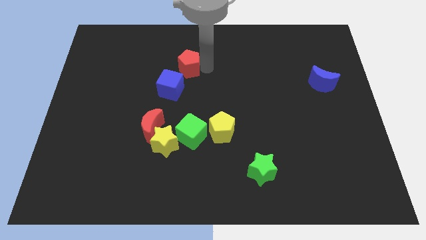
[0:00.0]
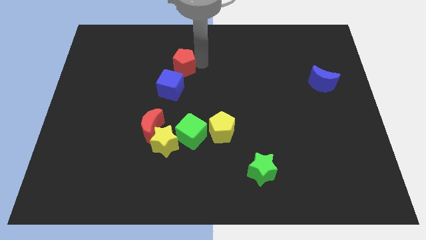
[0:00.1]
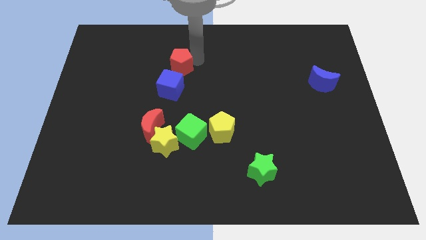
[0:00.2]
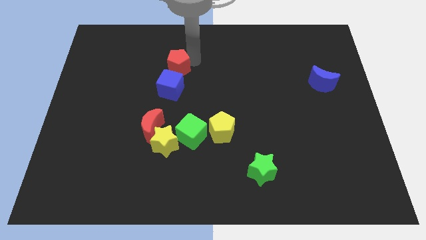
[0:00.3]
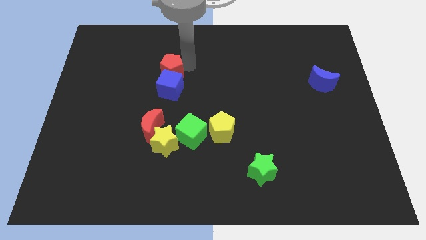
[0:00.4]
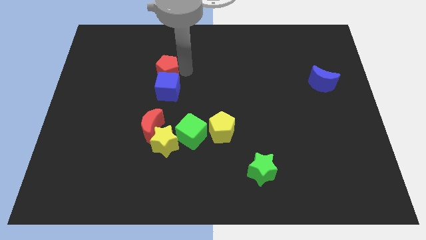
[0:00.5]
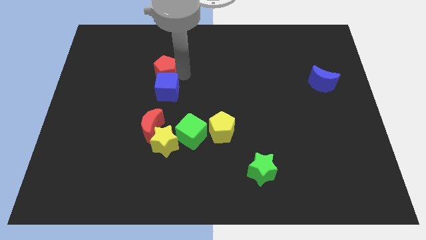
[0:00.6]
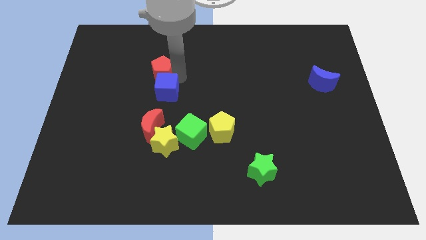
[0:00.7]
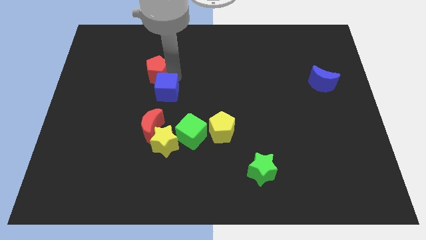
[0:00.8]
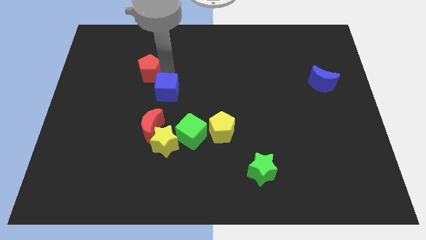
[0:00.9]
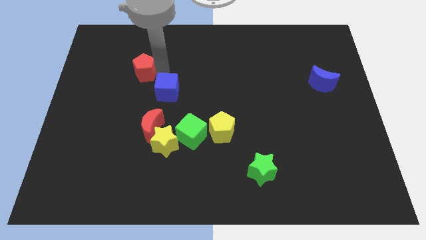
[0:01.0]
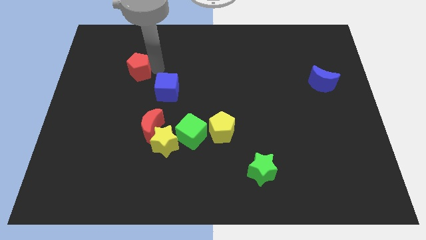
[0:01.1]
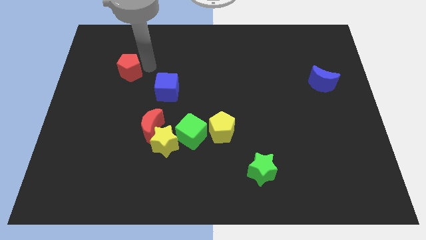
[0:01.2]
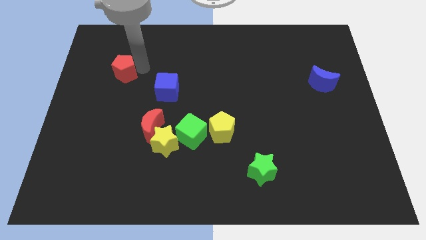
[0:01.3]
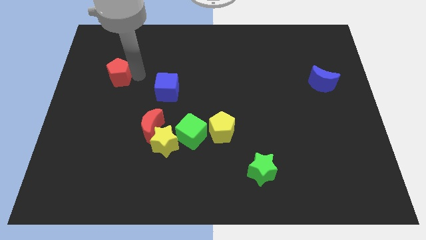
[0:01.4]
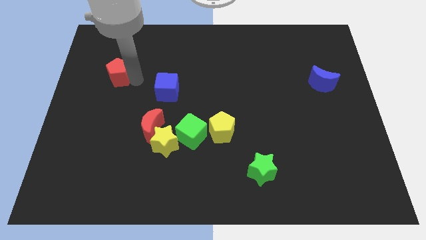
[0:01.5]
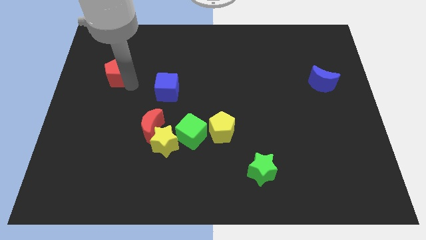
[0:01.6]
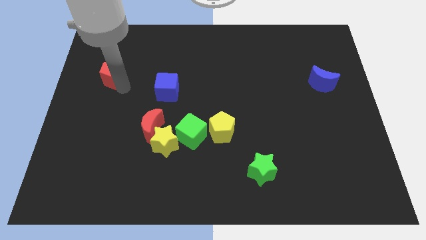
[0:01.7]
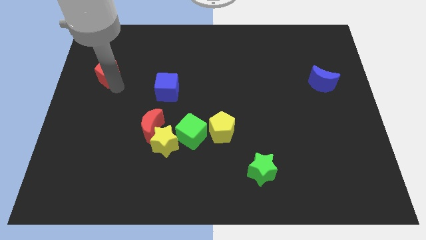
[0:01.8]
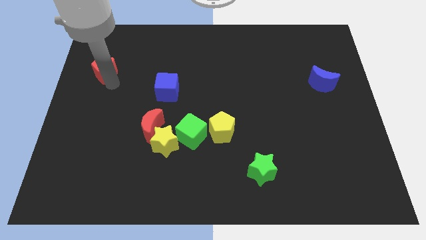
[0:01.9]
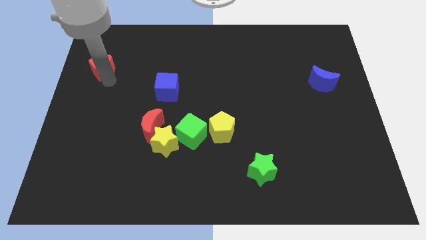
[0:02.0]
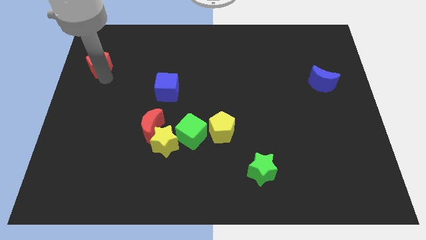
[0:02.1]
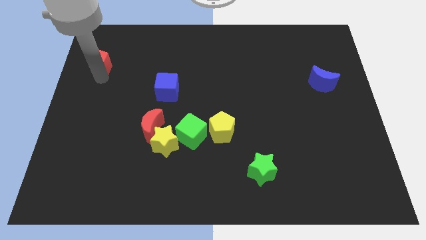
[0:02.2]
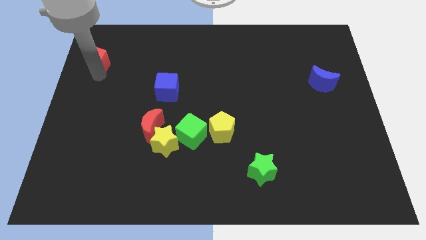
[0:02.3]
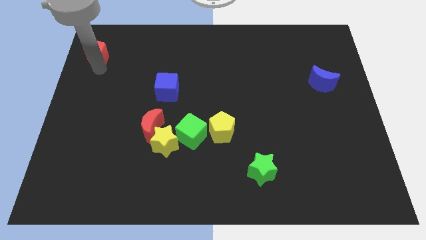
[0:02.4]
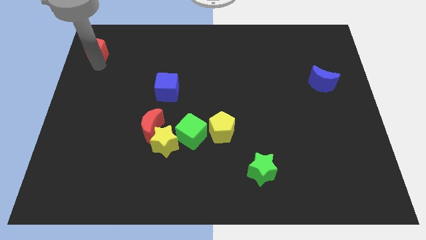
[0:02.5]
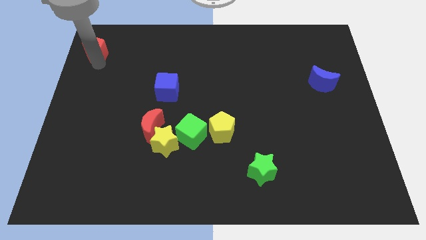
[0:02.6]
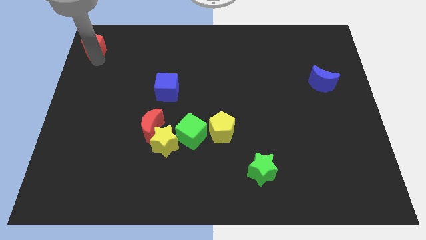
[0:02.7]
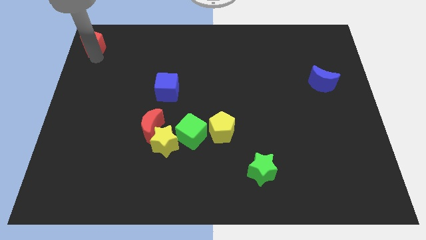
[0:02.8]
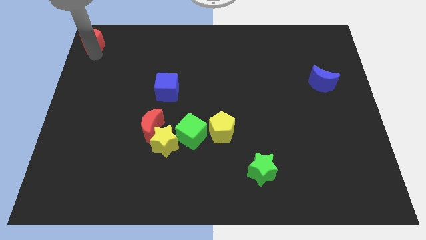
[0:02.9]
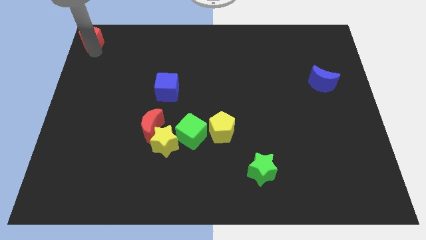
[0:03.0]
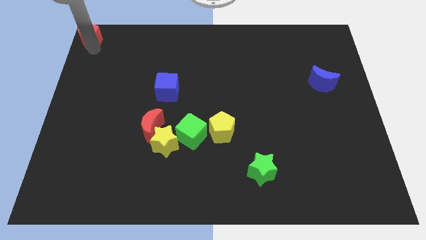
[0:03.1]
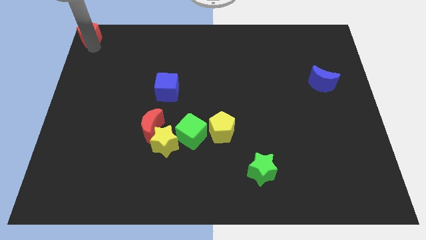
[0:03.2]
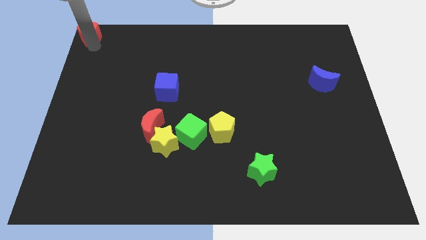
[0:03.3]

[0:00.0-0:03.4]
push the red pentagon to the top left side of the board

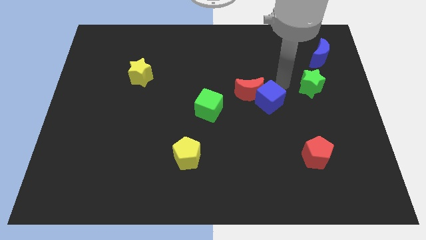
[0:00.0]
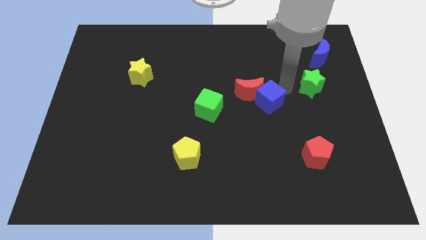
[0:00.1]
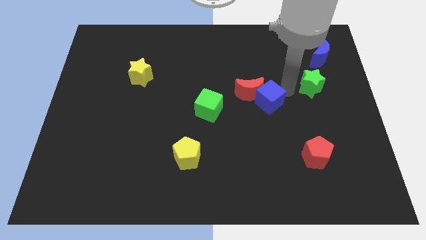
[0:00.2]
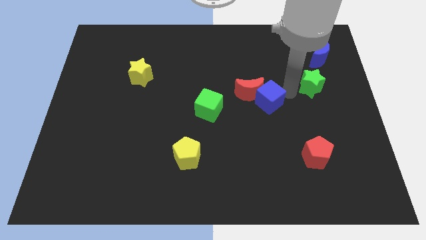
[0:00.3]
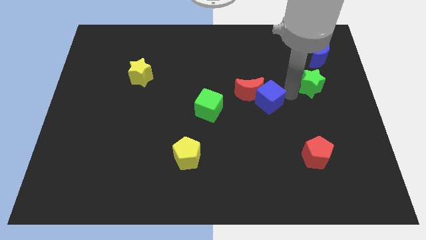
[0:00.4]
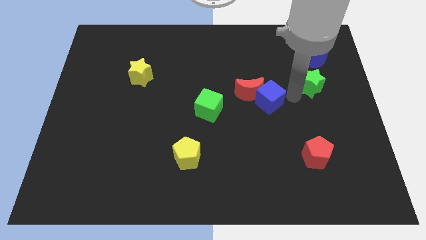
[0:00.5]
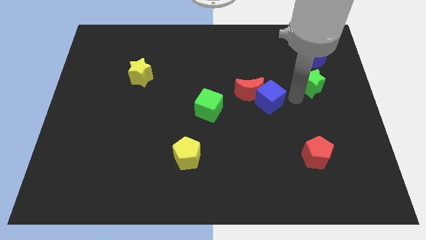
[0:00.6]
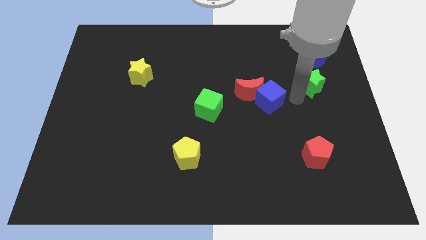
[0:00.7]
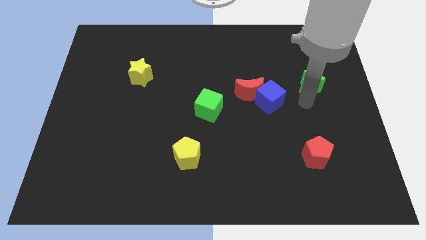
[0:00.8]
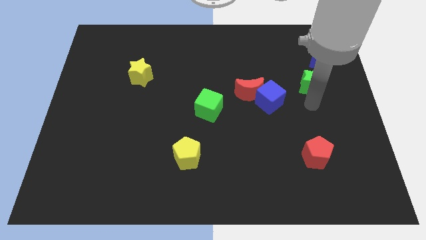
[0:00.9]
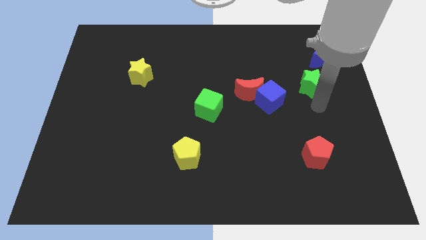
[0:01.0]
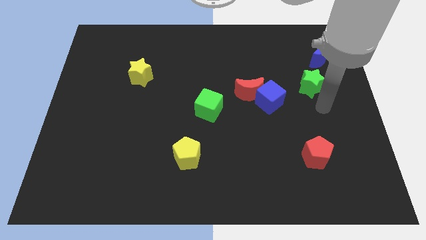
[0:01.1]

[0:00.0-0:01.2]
move arm below the green star

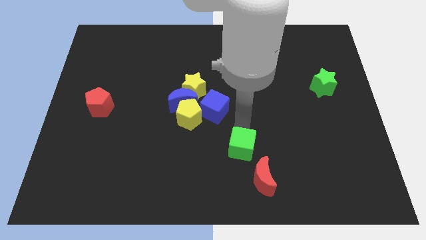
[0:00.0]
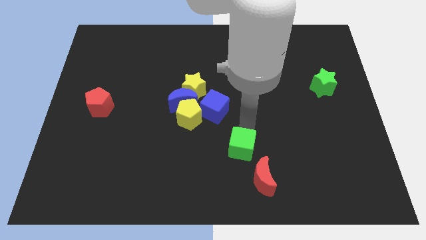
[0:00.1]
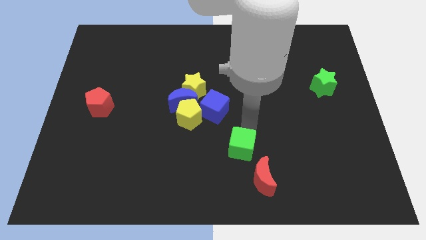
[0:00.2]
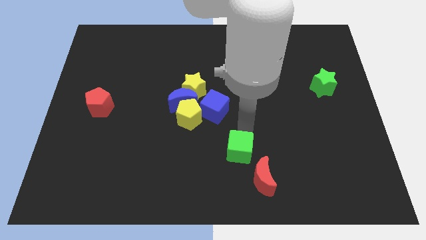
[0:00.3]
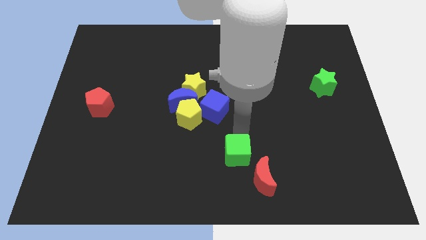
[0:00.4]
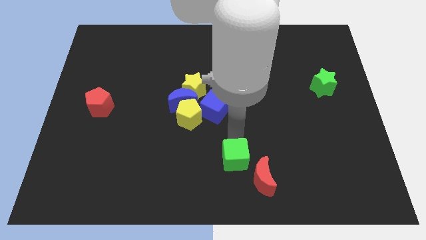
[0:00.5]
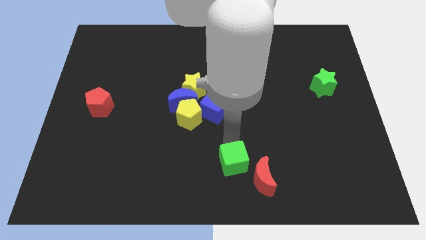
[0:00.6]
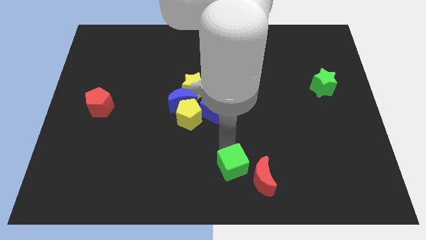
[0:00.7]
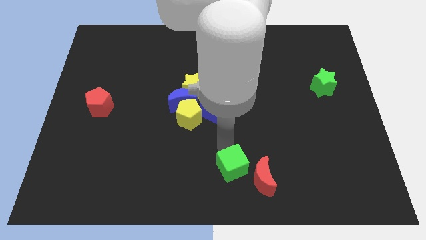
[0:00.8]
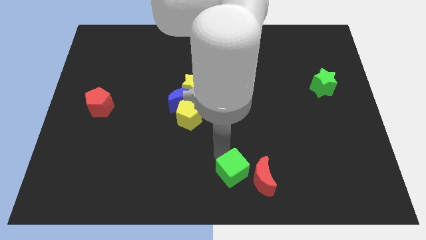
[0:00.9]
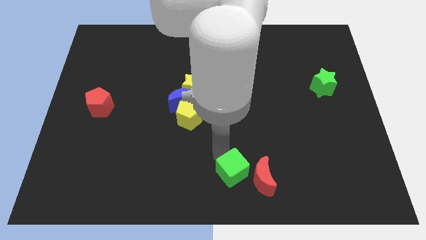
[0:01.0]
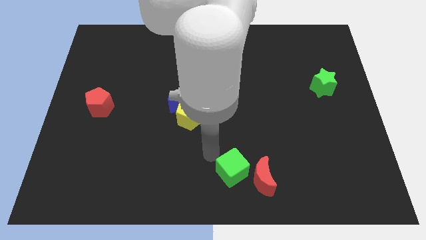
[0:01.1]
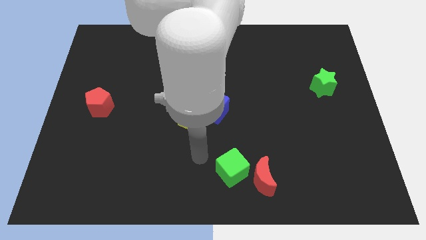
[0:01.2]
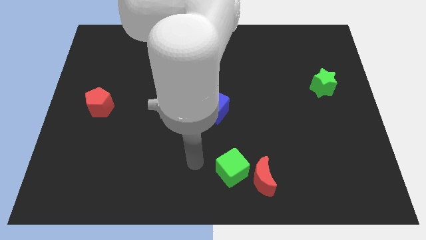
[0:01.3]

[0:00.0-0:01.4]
slide the green cube to the left of the red moon

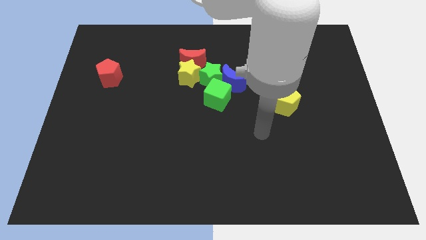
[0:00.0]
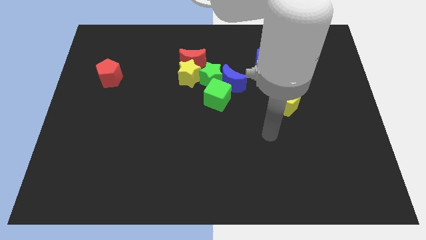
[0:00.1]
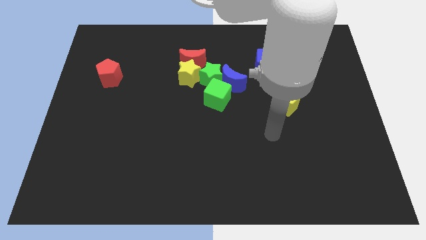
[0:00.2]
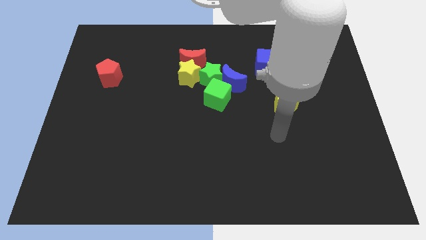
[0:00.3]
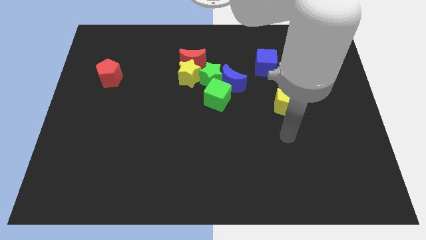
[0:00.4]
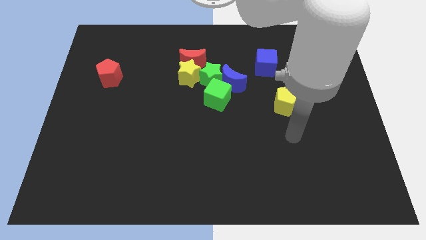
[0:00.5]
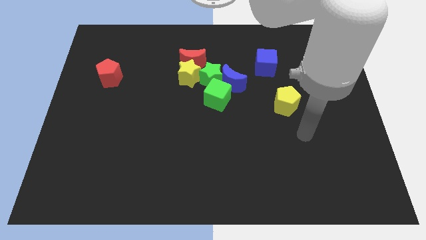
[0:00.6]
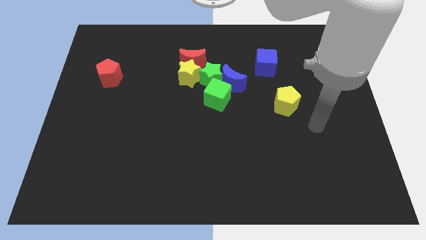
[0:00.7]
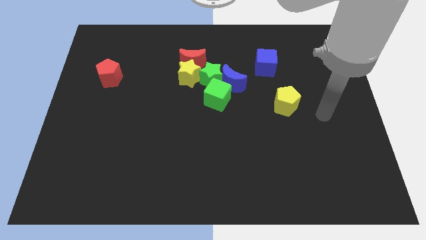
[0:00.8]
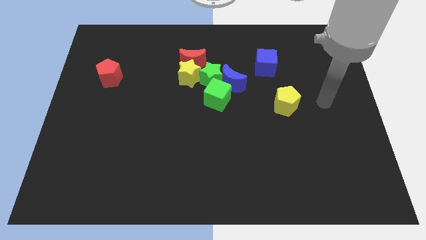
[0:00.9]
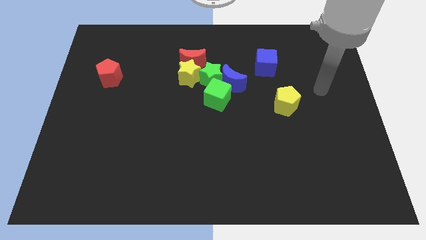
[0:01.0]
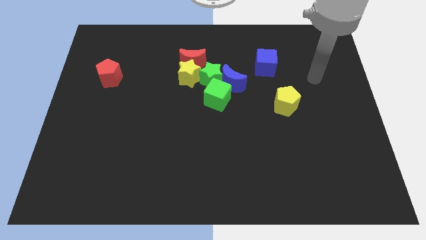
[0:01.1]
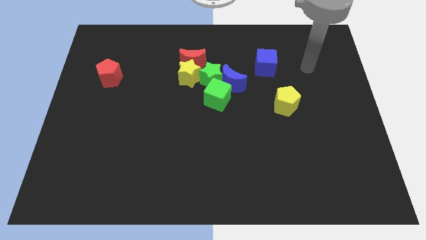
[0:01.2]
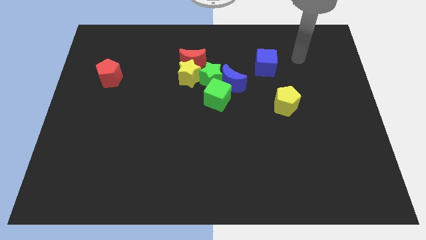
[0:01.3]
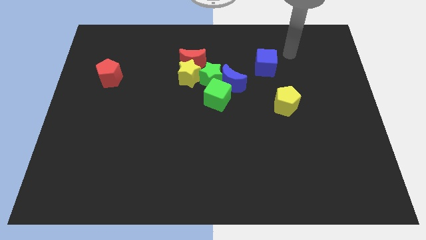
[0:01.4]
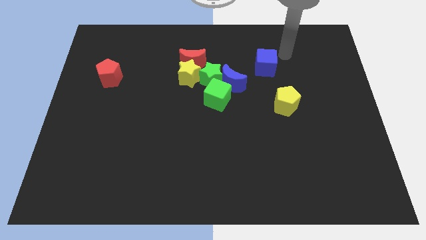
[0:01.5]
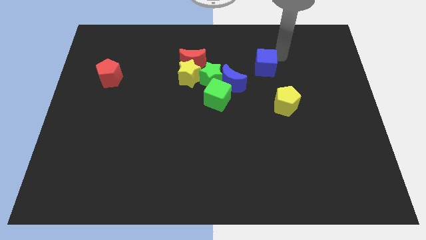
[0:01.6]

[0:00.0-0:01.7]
move the arm to the top right of the blue cube

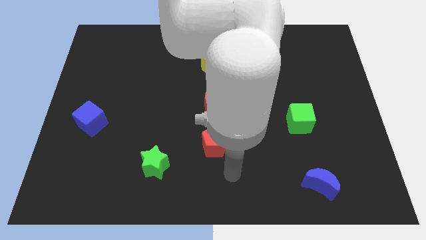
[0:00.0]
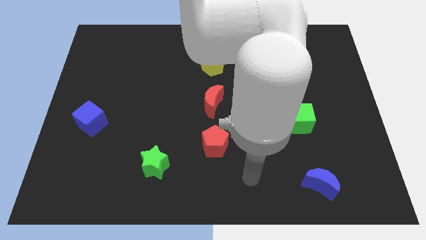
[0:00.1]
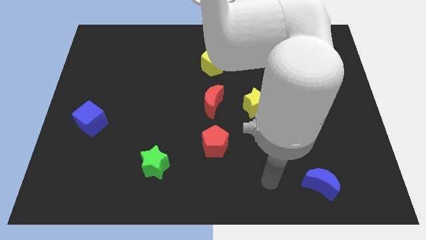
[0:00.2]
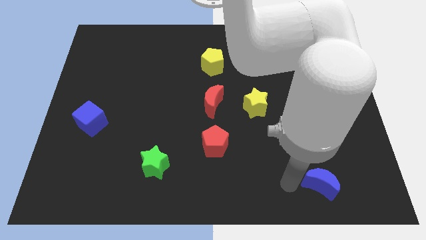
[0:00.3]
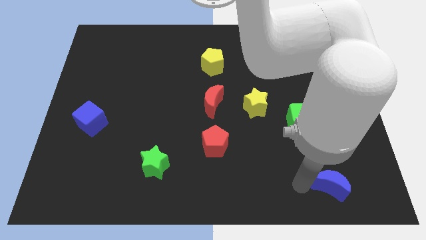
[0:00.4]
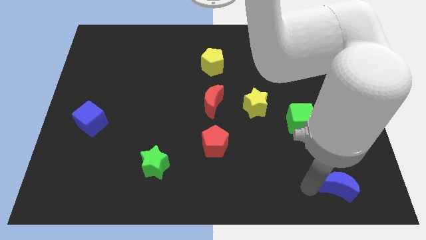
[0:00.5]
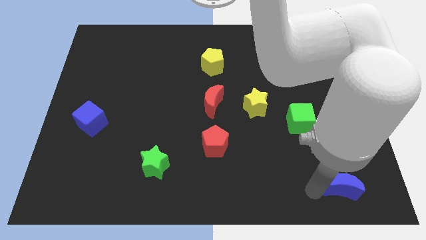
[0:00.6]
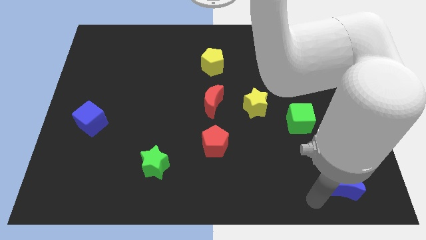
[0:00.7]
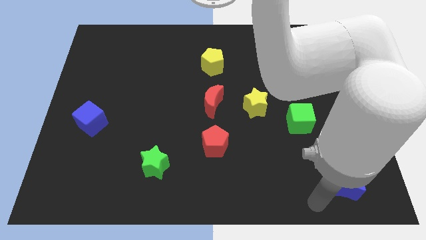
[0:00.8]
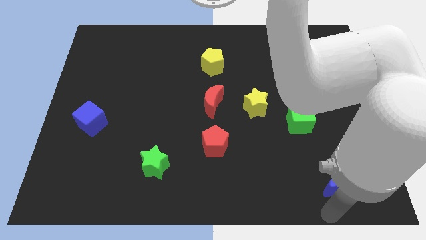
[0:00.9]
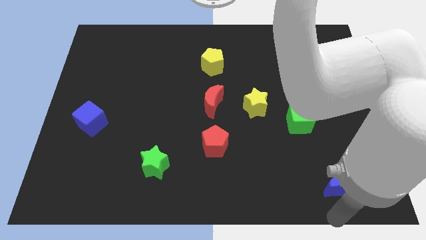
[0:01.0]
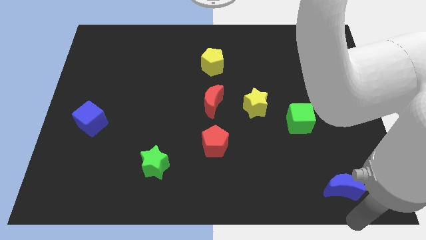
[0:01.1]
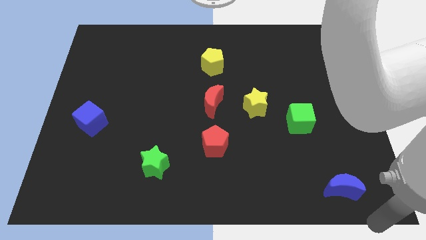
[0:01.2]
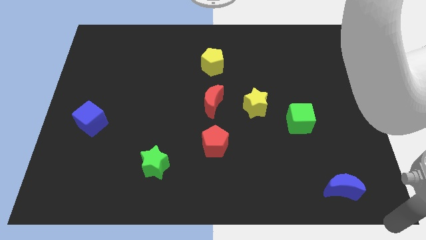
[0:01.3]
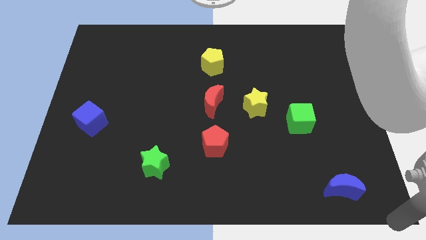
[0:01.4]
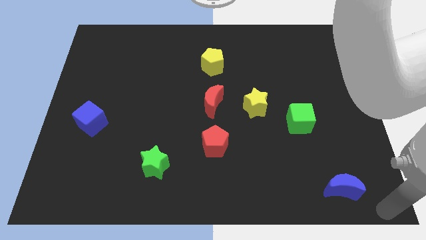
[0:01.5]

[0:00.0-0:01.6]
move the blue moon to the bottom right of the board
